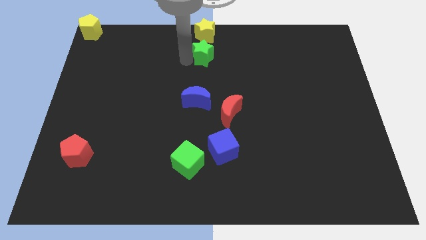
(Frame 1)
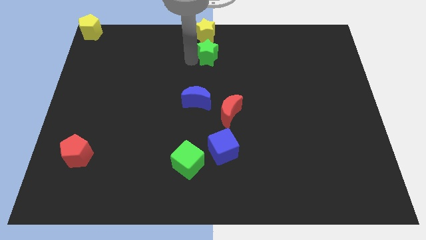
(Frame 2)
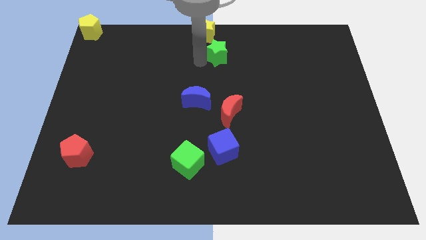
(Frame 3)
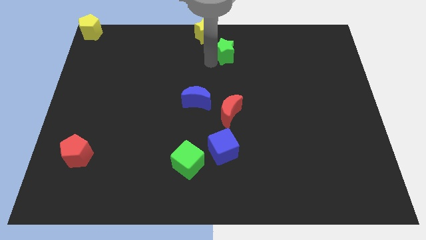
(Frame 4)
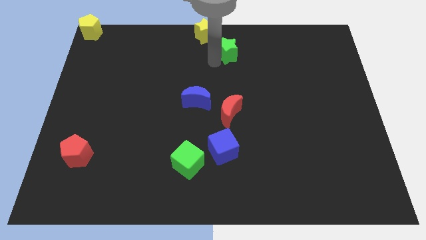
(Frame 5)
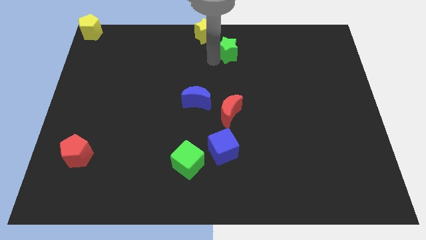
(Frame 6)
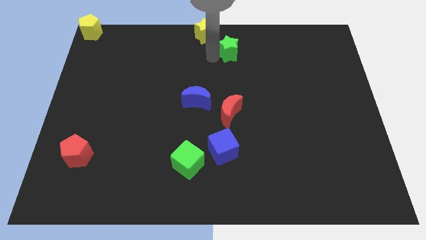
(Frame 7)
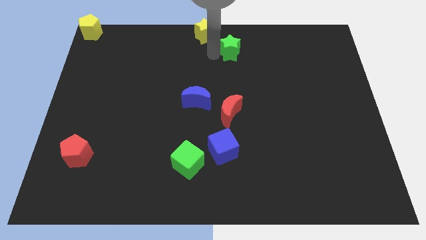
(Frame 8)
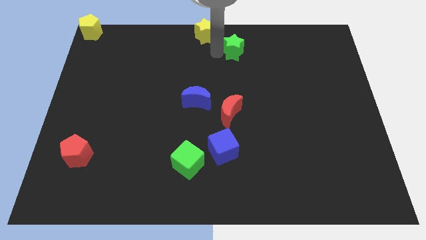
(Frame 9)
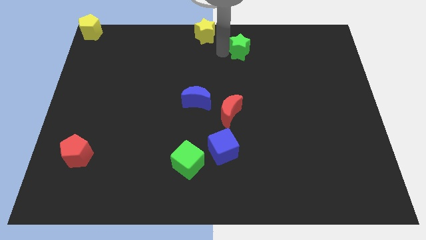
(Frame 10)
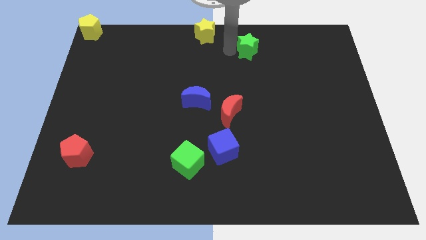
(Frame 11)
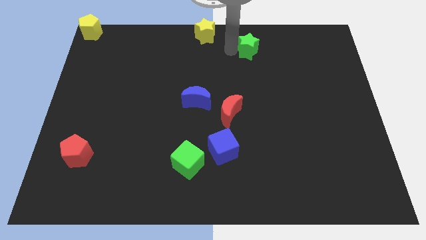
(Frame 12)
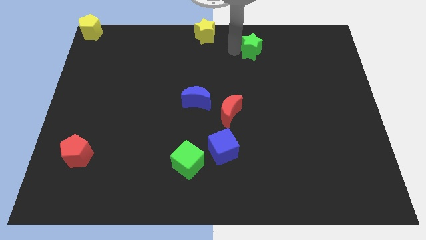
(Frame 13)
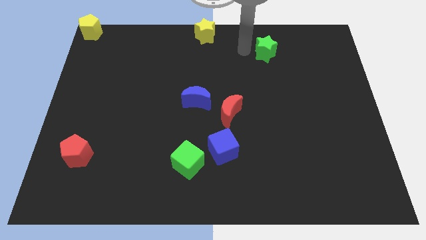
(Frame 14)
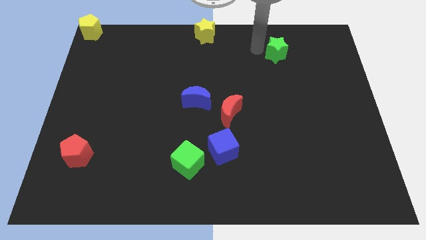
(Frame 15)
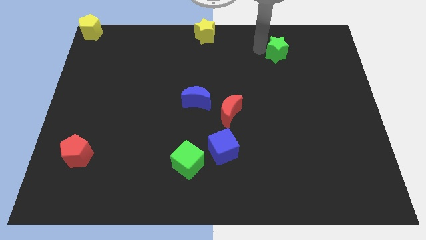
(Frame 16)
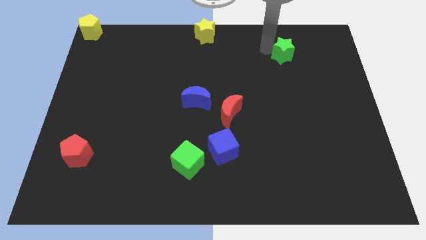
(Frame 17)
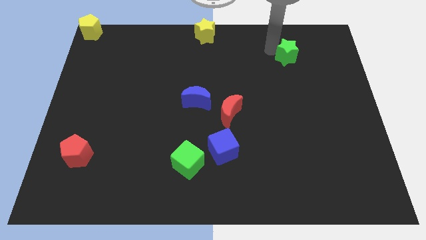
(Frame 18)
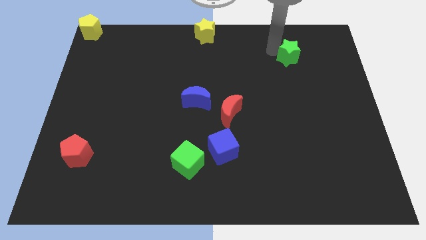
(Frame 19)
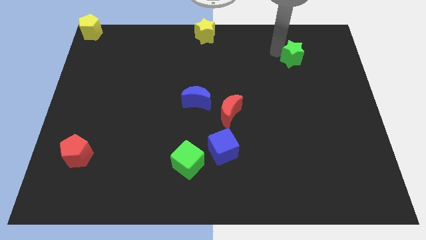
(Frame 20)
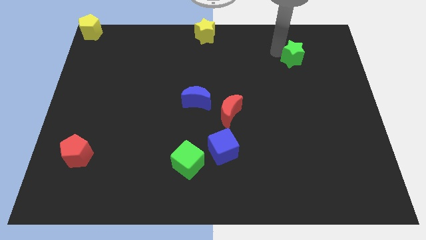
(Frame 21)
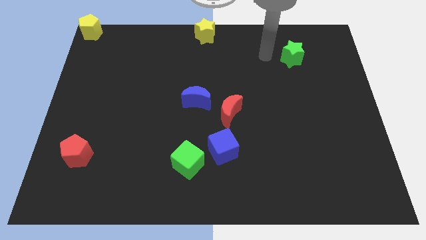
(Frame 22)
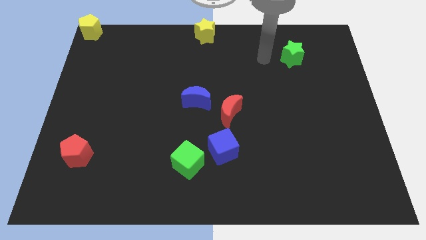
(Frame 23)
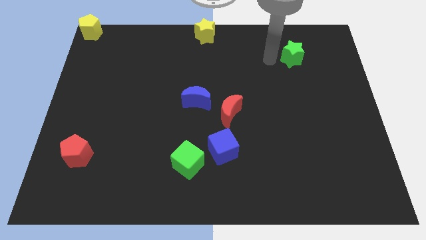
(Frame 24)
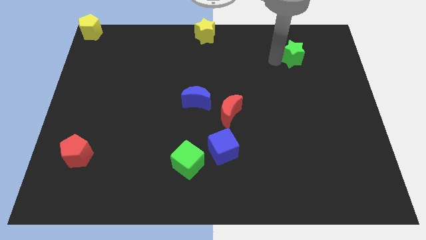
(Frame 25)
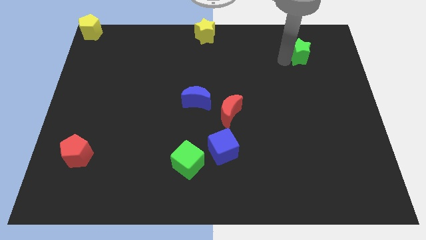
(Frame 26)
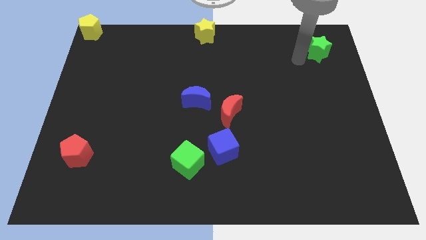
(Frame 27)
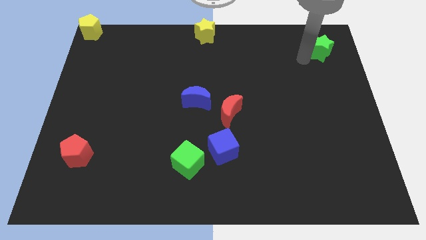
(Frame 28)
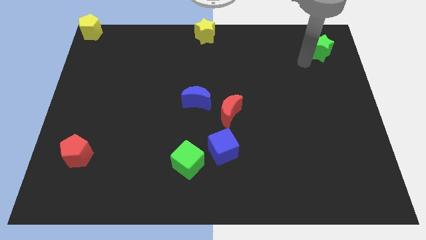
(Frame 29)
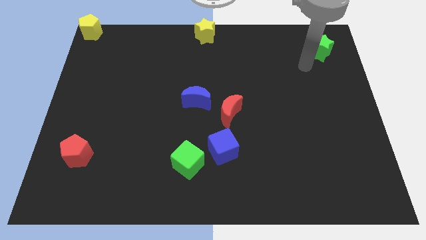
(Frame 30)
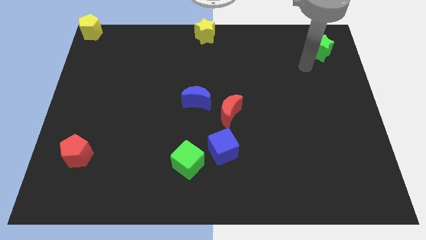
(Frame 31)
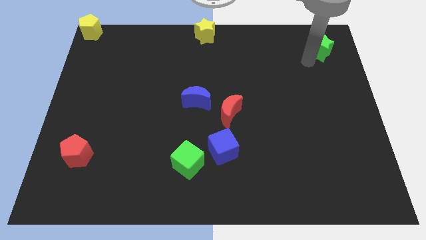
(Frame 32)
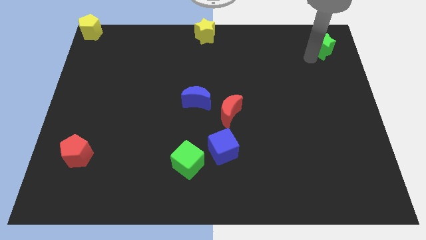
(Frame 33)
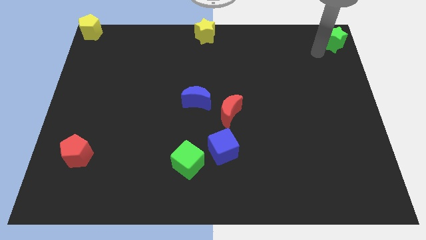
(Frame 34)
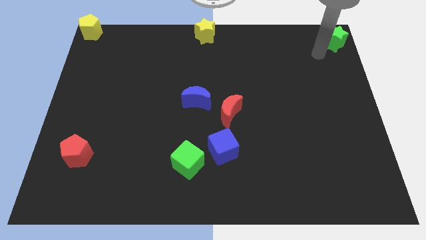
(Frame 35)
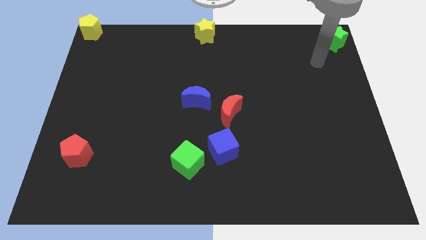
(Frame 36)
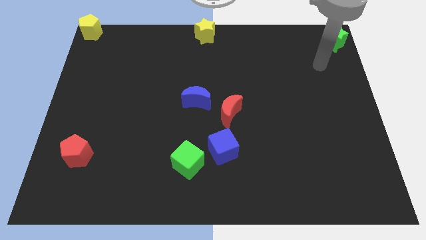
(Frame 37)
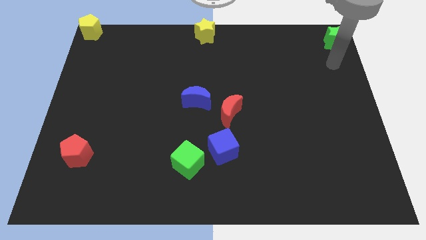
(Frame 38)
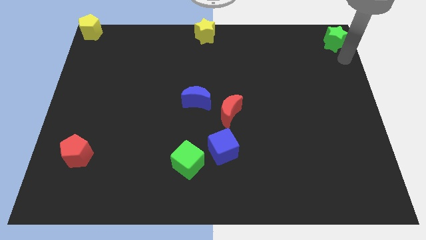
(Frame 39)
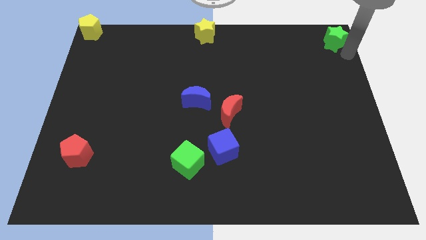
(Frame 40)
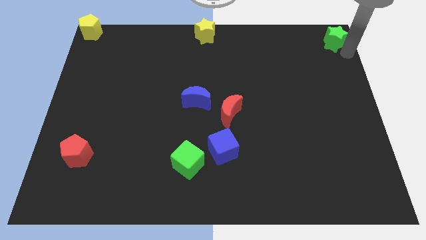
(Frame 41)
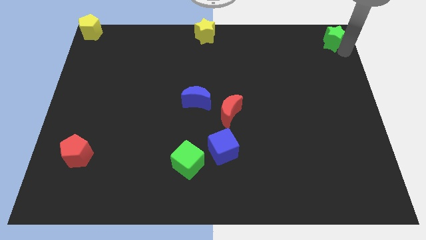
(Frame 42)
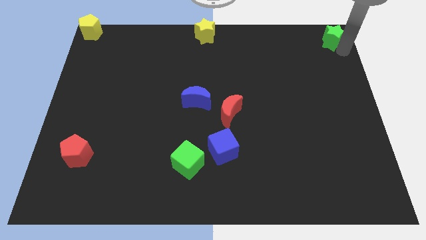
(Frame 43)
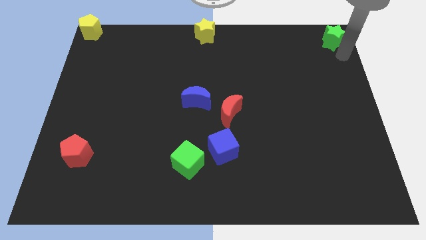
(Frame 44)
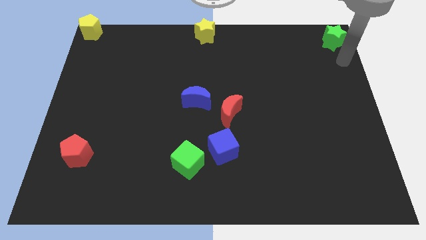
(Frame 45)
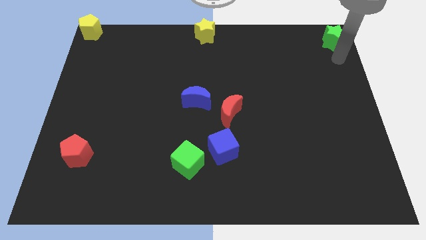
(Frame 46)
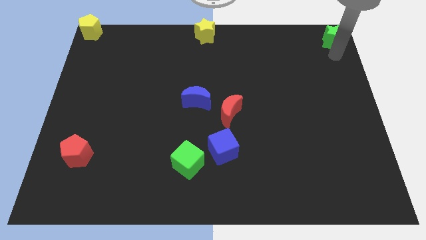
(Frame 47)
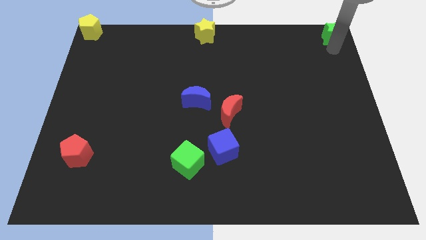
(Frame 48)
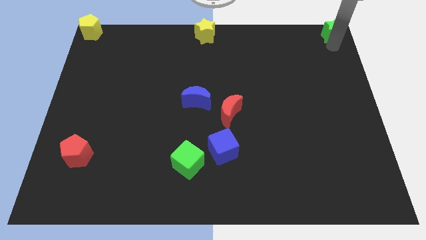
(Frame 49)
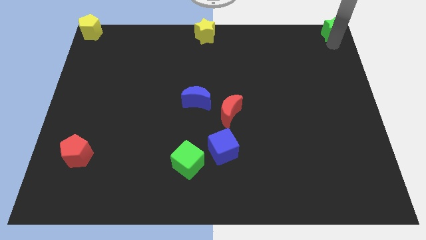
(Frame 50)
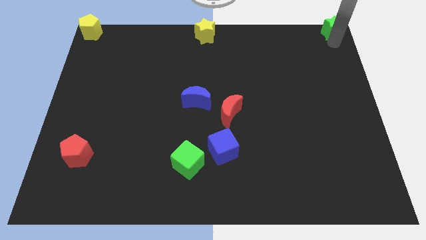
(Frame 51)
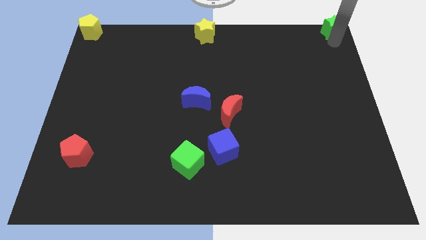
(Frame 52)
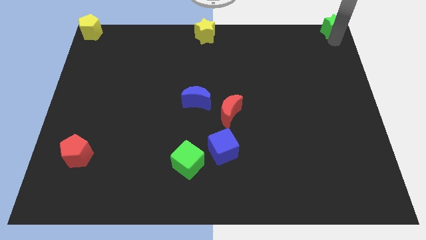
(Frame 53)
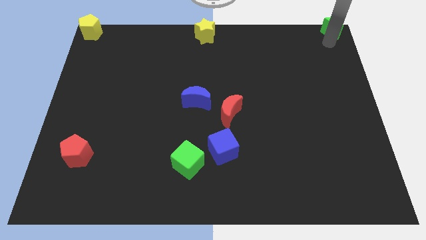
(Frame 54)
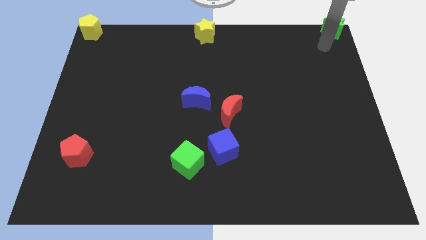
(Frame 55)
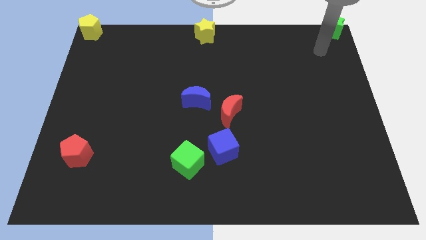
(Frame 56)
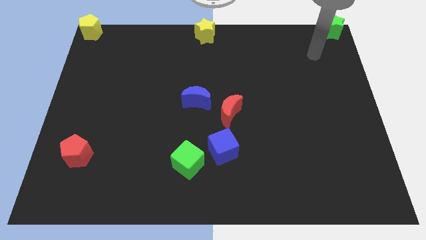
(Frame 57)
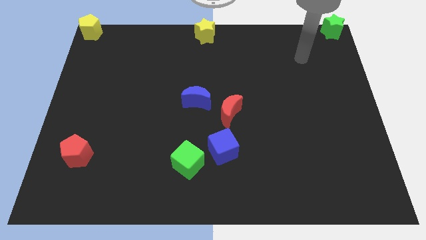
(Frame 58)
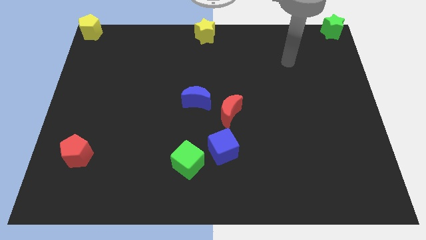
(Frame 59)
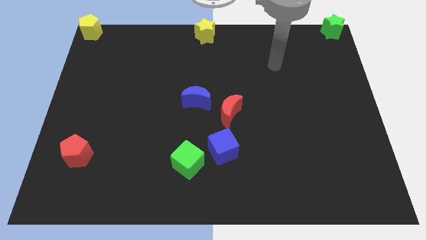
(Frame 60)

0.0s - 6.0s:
push the green star towards the top right corner of the board

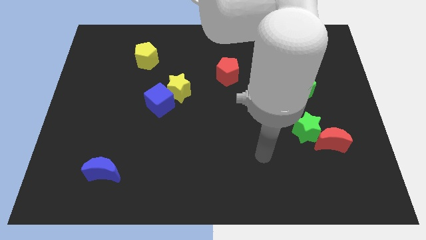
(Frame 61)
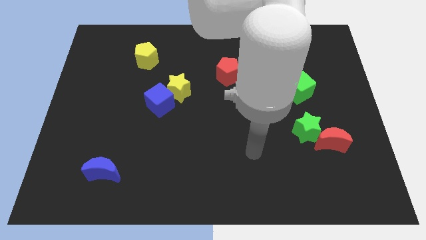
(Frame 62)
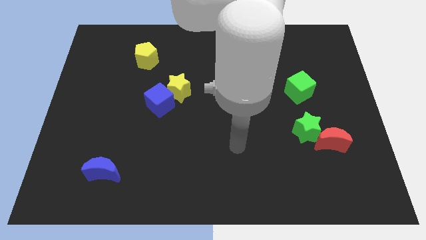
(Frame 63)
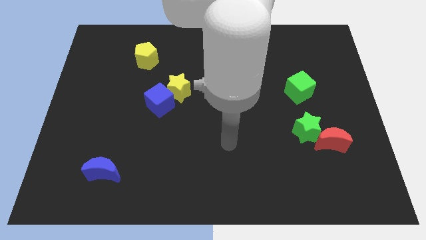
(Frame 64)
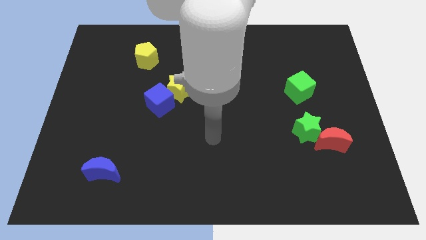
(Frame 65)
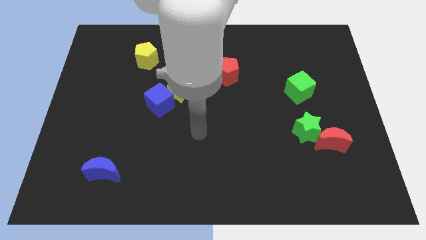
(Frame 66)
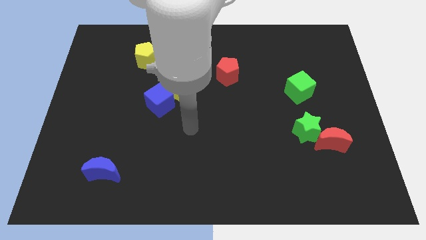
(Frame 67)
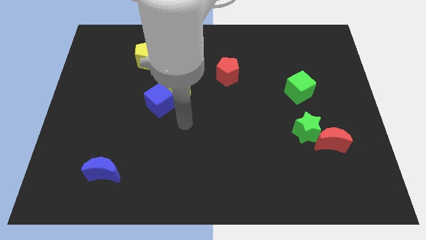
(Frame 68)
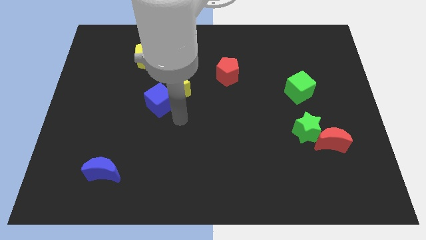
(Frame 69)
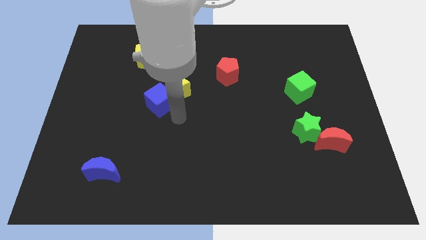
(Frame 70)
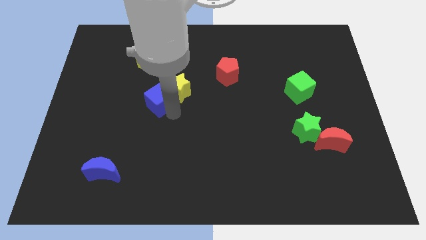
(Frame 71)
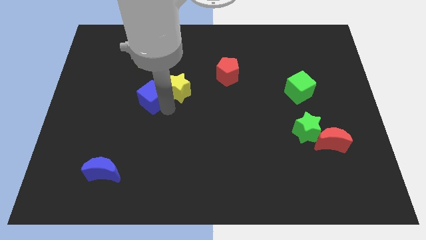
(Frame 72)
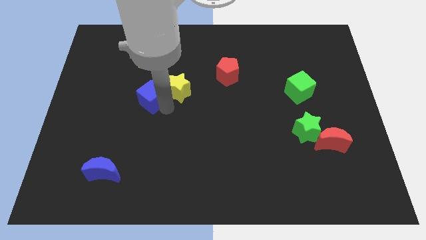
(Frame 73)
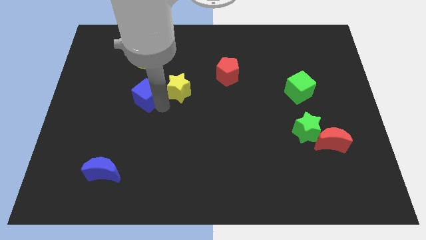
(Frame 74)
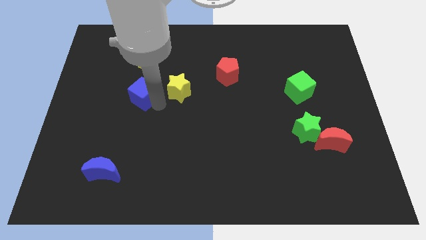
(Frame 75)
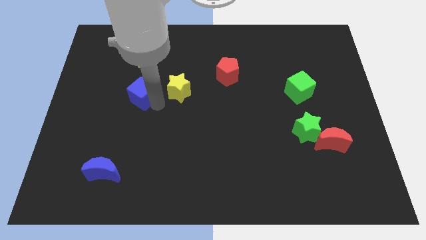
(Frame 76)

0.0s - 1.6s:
separate the blue cube from the yellow star

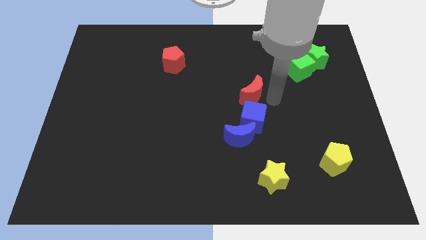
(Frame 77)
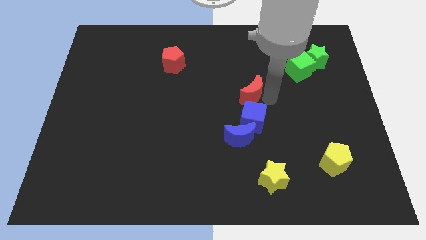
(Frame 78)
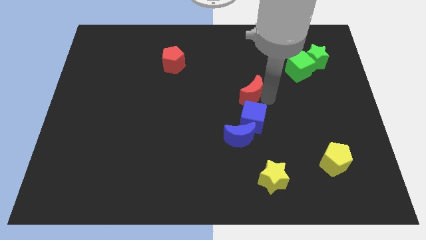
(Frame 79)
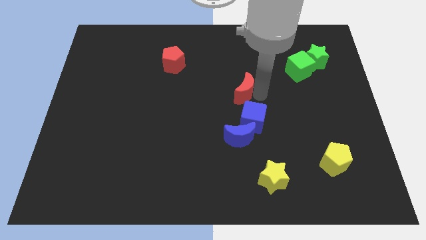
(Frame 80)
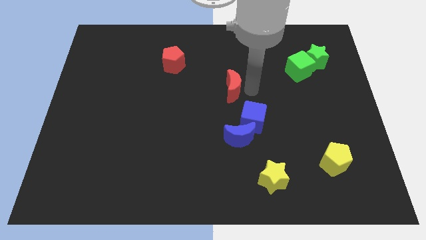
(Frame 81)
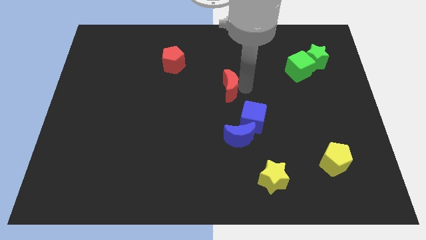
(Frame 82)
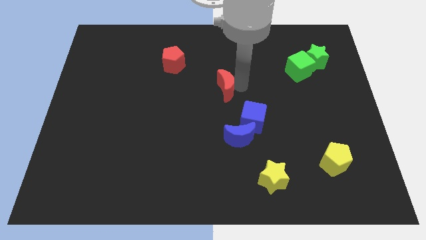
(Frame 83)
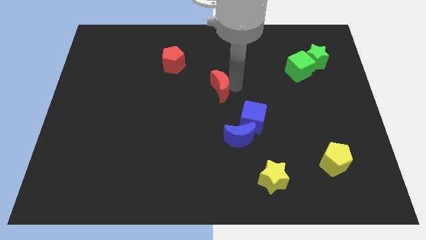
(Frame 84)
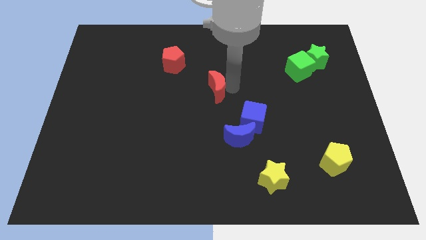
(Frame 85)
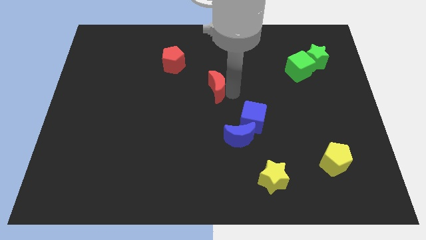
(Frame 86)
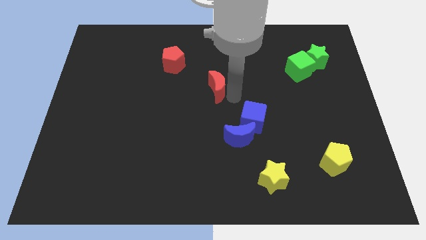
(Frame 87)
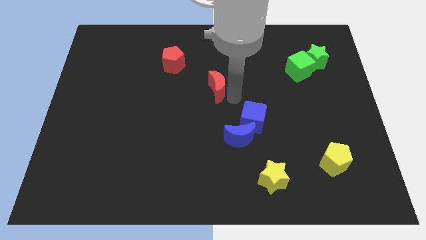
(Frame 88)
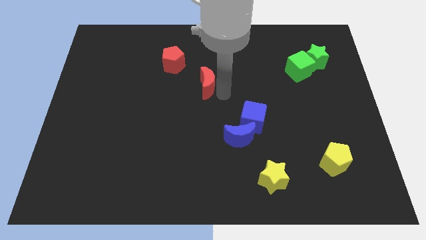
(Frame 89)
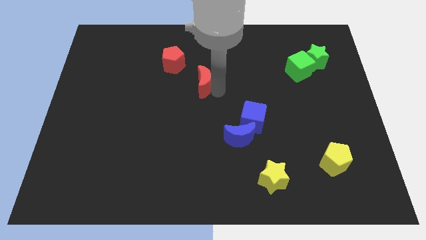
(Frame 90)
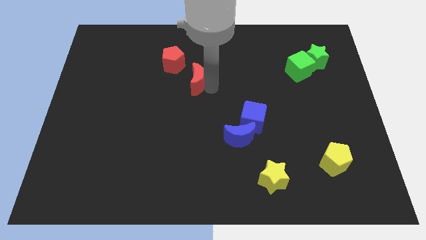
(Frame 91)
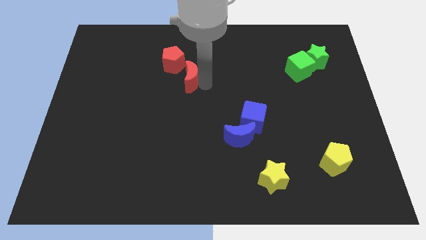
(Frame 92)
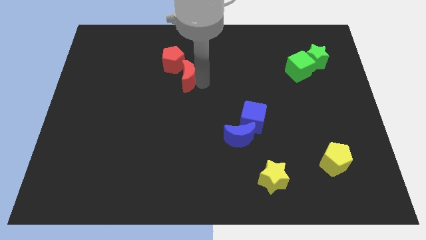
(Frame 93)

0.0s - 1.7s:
put the red moon at the bottom right side of the red pentagon
